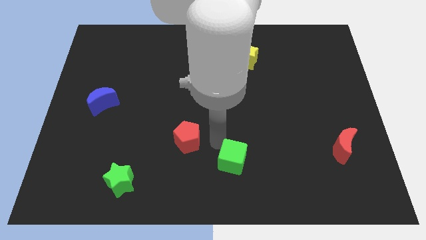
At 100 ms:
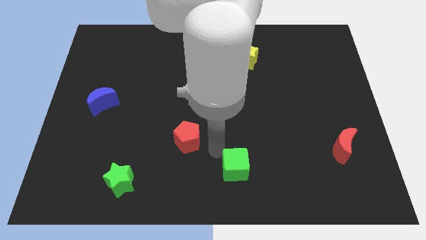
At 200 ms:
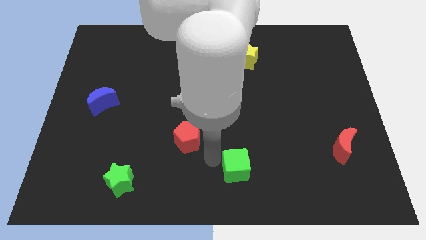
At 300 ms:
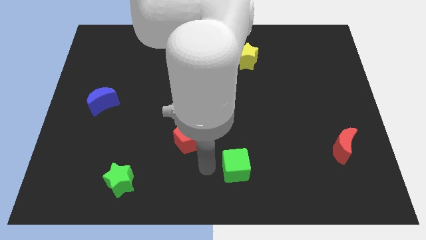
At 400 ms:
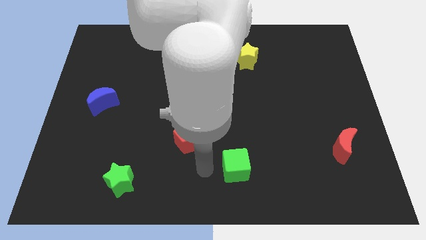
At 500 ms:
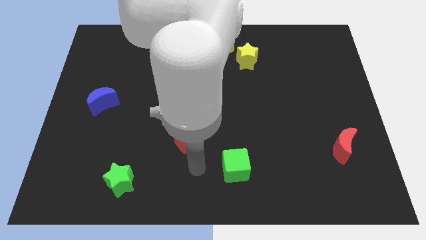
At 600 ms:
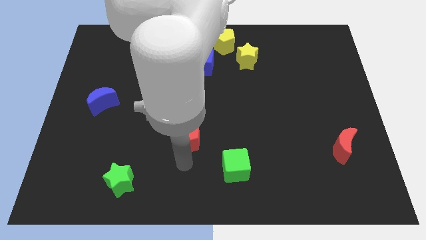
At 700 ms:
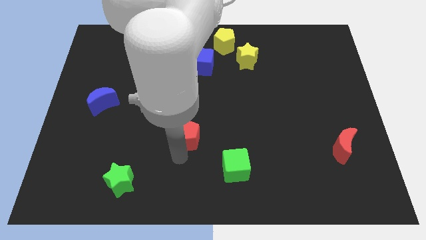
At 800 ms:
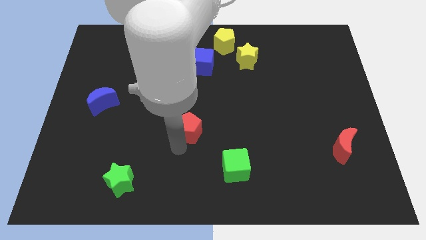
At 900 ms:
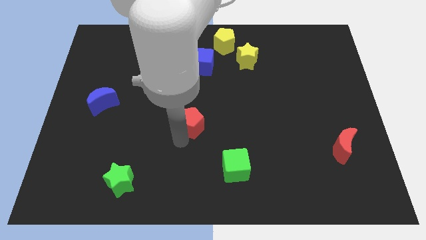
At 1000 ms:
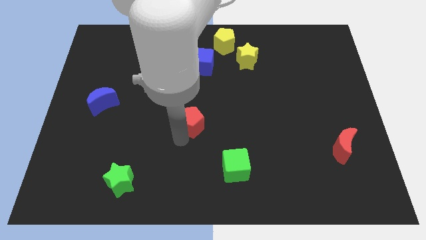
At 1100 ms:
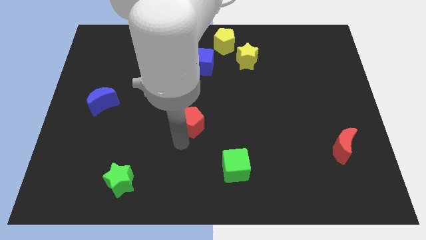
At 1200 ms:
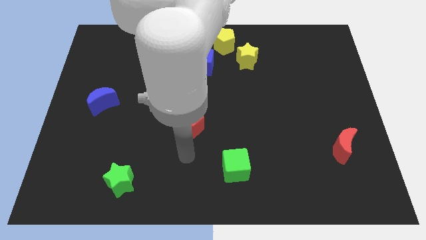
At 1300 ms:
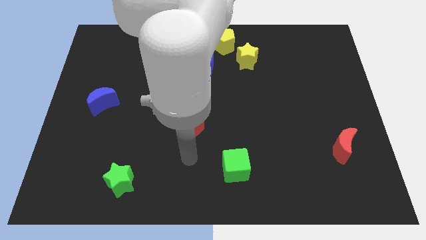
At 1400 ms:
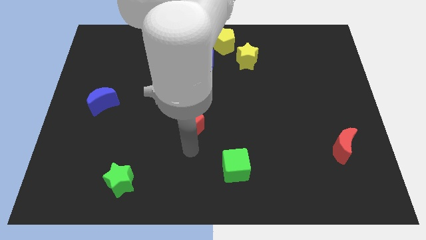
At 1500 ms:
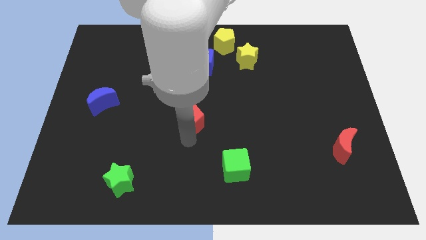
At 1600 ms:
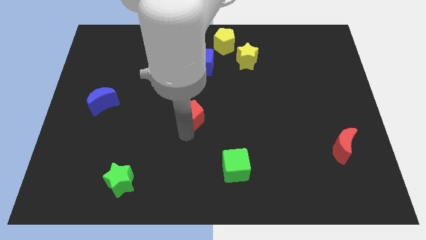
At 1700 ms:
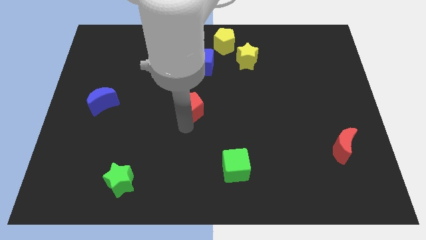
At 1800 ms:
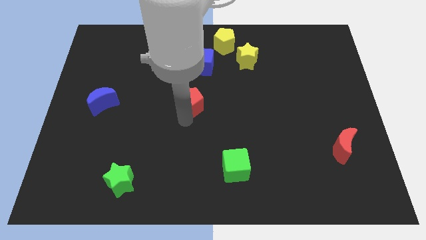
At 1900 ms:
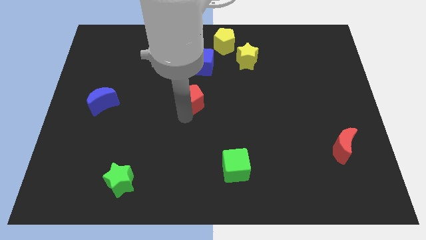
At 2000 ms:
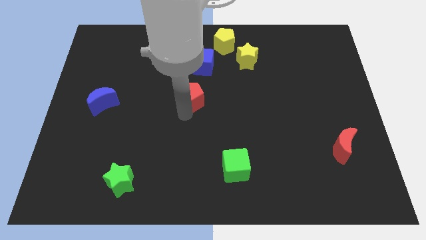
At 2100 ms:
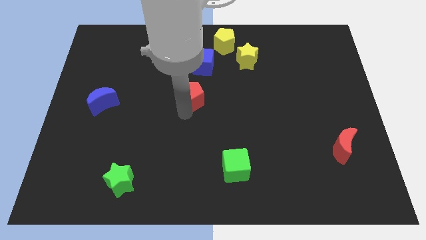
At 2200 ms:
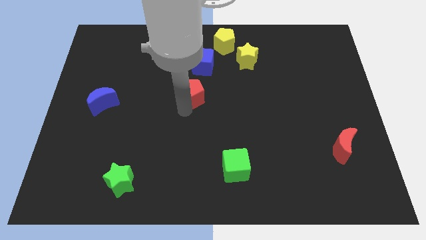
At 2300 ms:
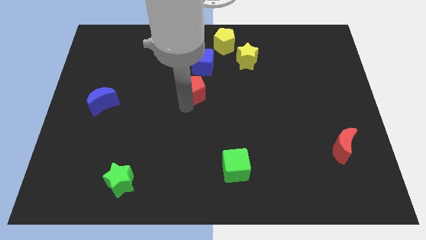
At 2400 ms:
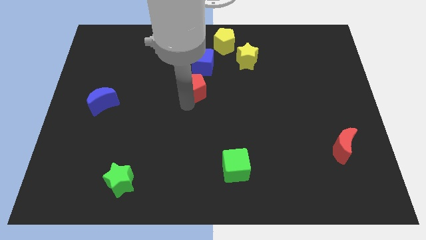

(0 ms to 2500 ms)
push red pentagon towards blue cube

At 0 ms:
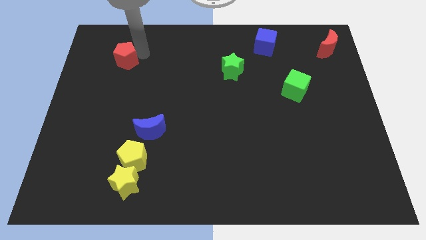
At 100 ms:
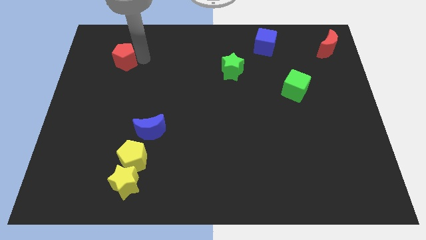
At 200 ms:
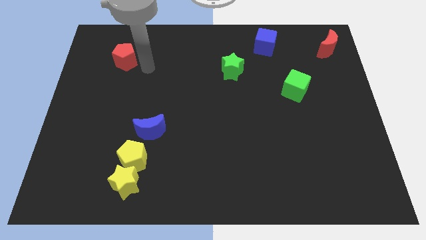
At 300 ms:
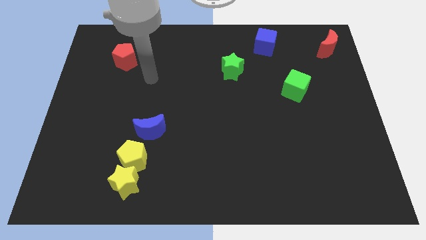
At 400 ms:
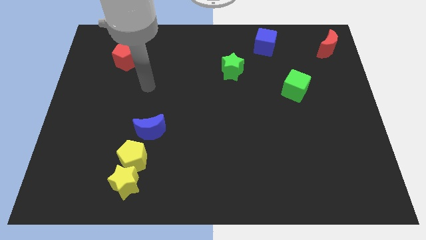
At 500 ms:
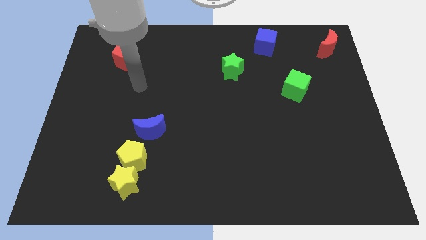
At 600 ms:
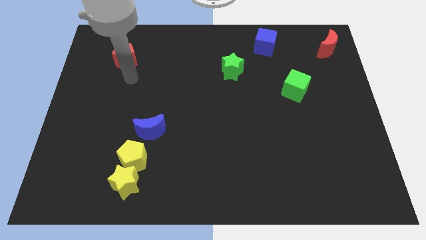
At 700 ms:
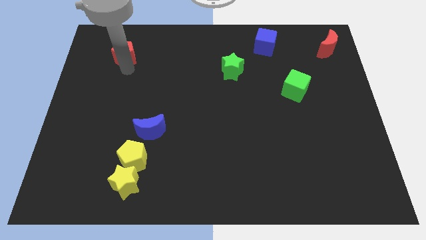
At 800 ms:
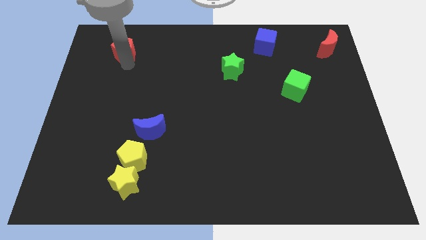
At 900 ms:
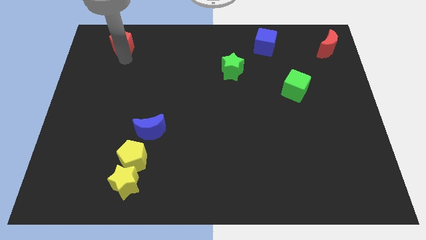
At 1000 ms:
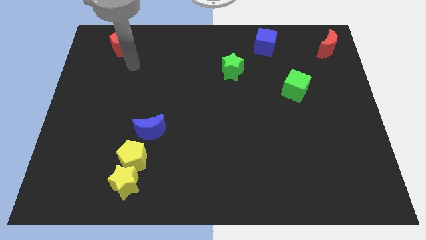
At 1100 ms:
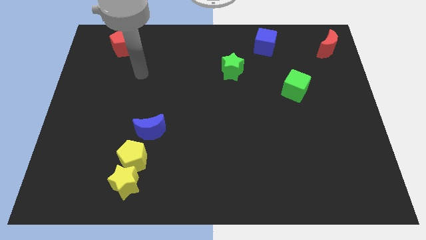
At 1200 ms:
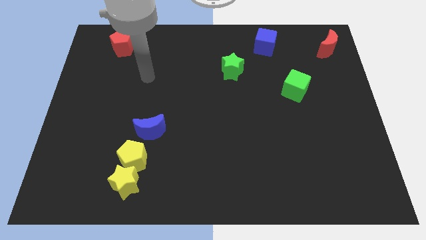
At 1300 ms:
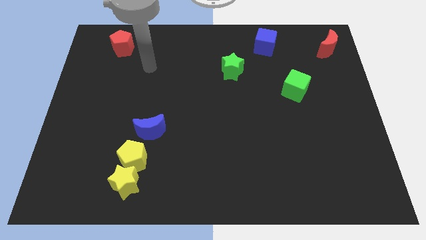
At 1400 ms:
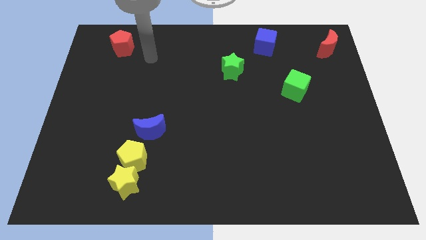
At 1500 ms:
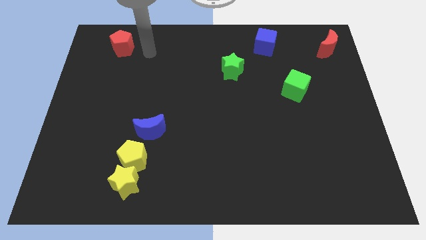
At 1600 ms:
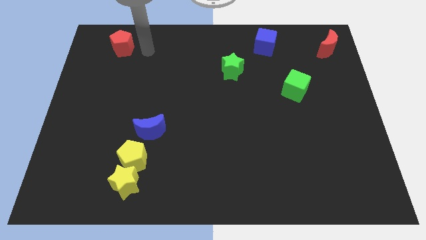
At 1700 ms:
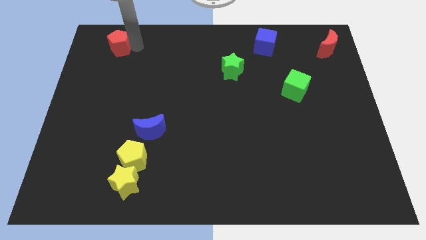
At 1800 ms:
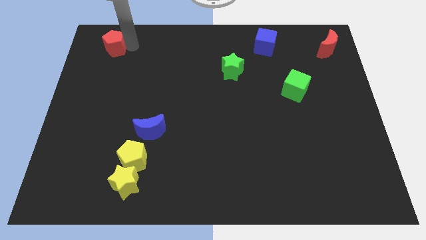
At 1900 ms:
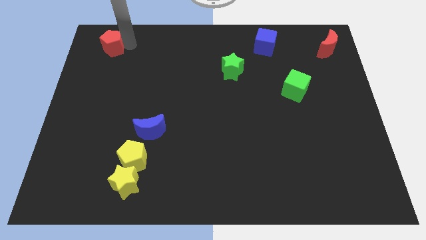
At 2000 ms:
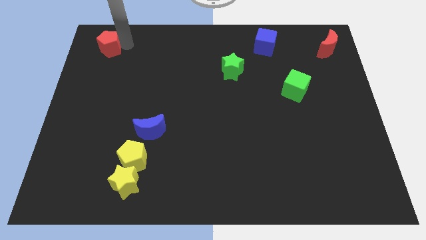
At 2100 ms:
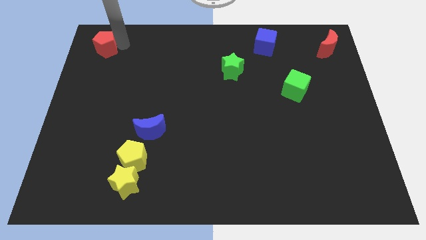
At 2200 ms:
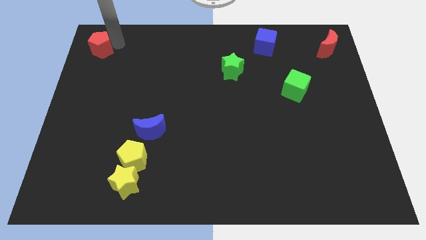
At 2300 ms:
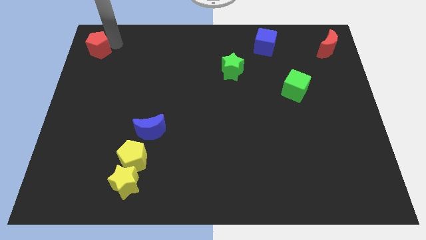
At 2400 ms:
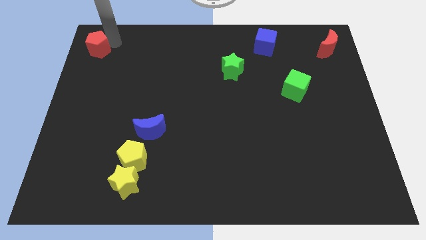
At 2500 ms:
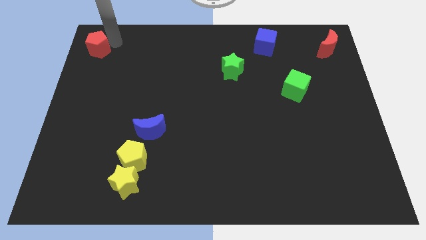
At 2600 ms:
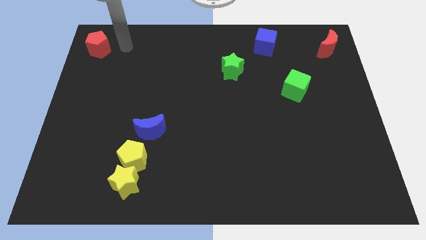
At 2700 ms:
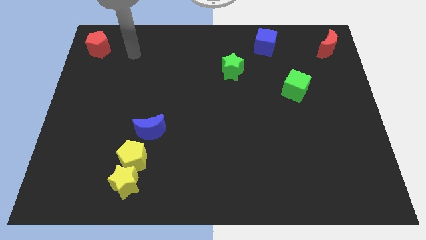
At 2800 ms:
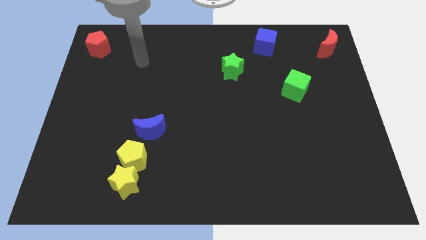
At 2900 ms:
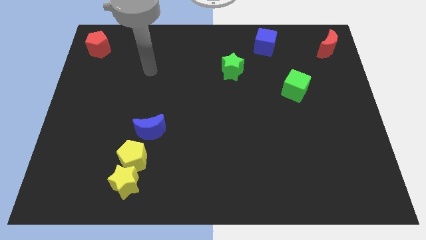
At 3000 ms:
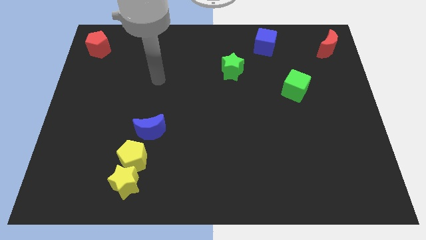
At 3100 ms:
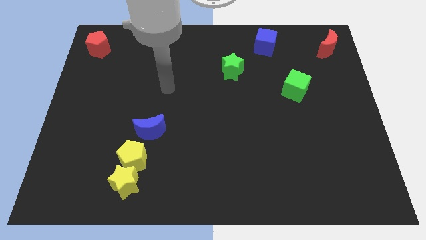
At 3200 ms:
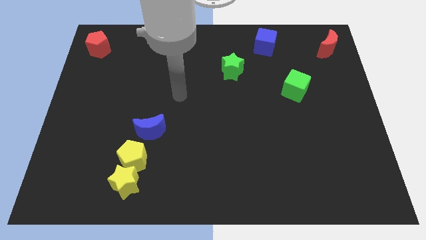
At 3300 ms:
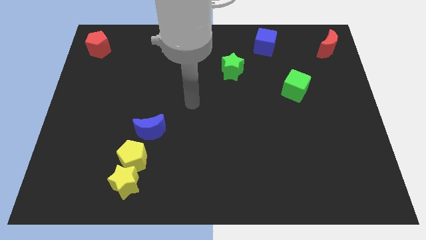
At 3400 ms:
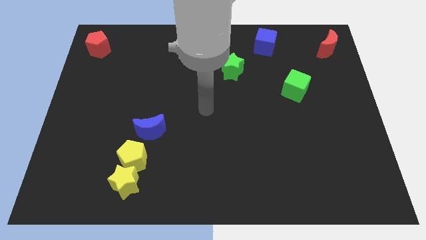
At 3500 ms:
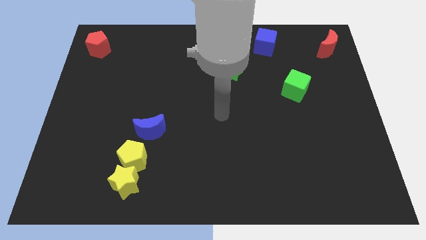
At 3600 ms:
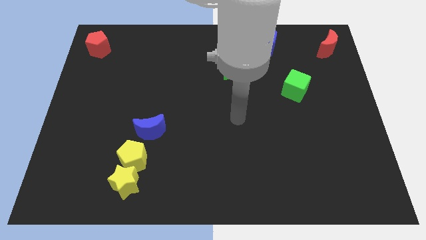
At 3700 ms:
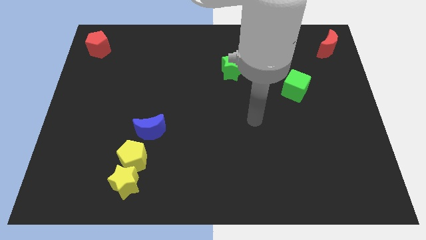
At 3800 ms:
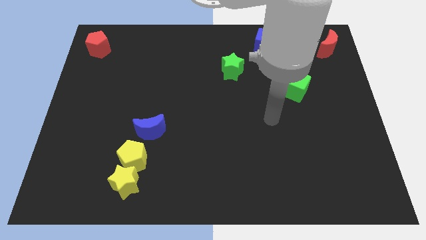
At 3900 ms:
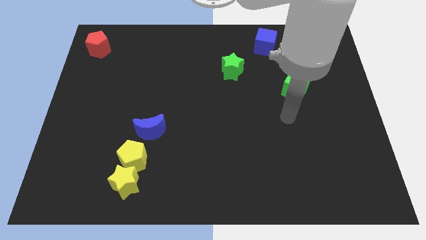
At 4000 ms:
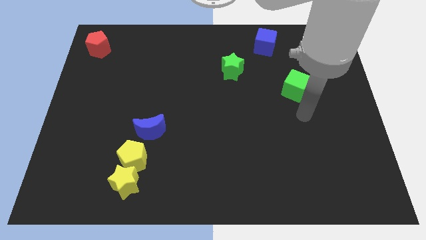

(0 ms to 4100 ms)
place the red pentagon at the top left corner

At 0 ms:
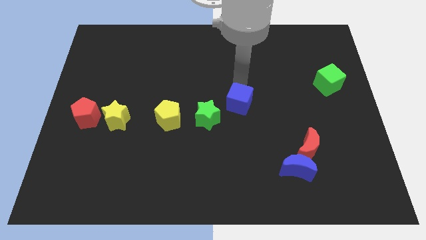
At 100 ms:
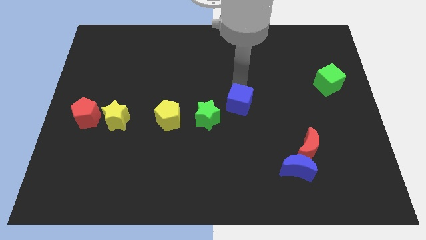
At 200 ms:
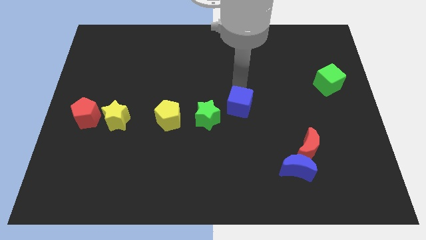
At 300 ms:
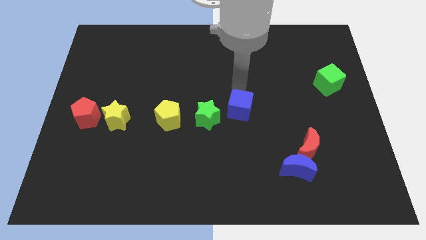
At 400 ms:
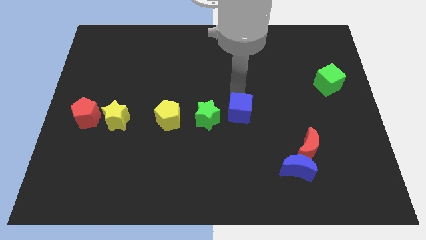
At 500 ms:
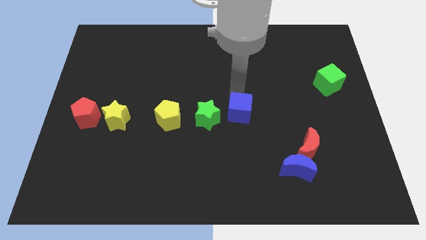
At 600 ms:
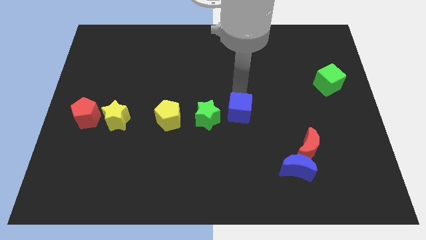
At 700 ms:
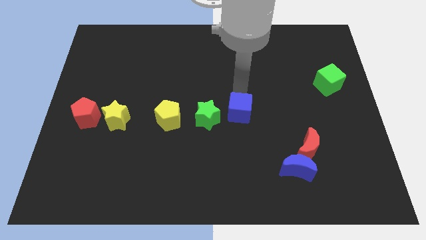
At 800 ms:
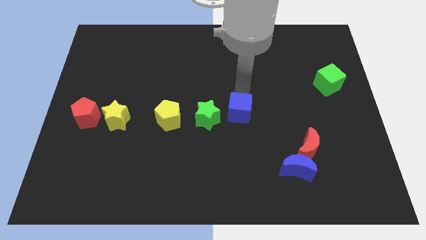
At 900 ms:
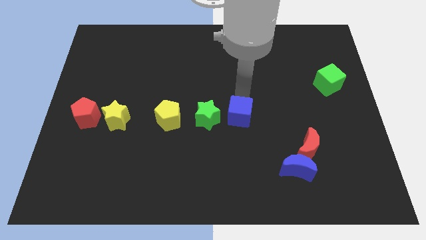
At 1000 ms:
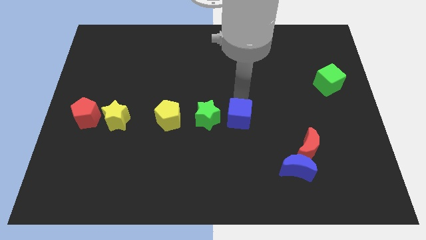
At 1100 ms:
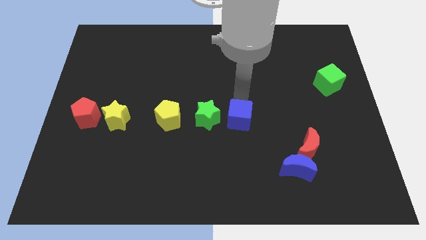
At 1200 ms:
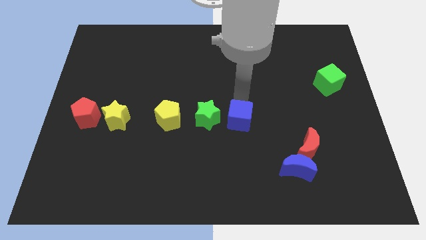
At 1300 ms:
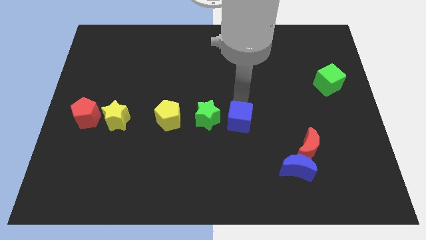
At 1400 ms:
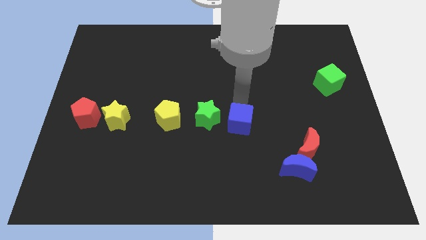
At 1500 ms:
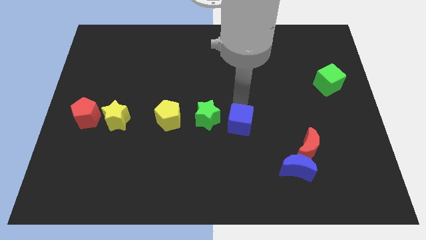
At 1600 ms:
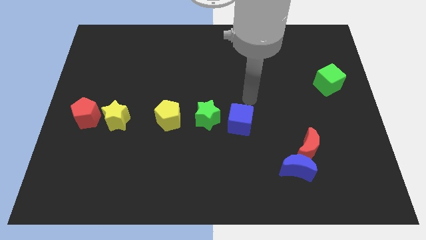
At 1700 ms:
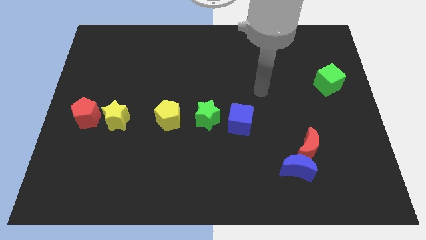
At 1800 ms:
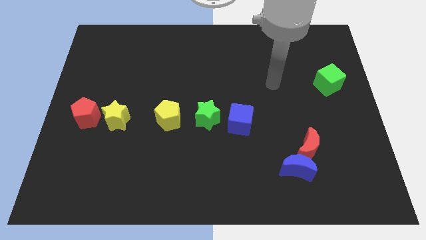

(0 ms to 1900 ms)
place the blue cube to the right of green star

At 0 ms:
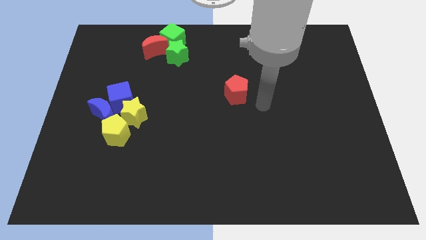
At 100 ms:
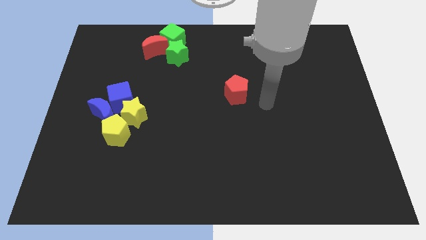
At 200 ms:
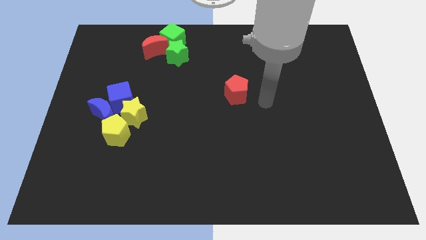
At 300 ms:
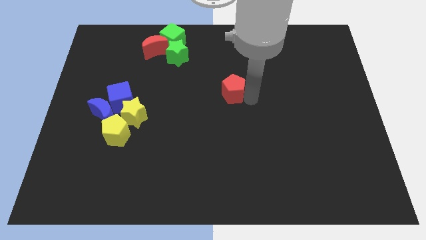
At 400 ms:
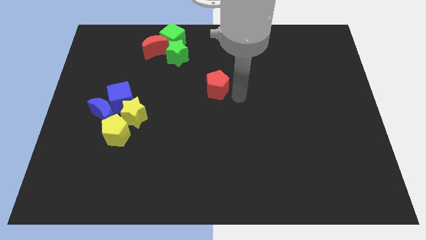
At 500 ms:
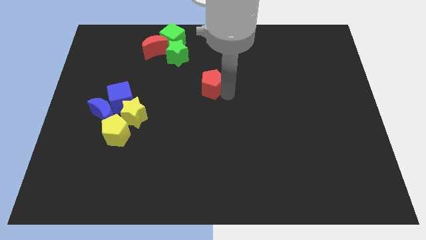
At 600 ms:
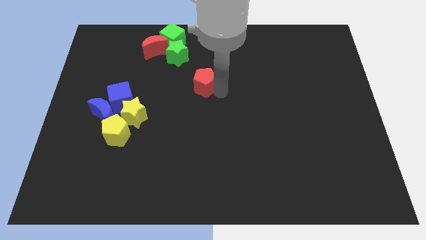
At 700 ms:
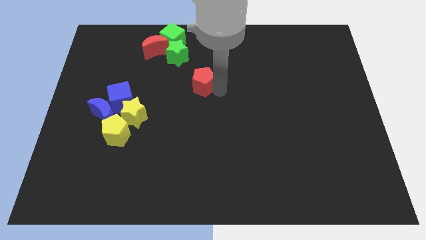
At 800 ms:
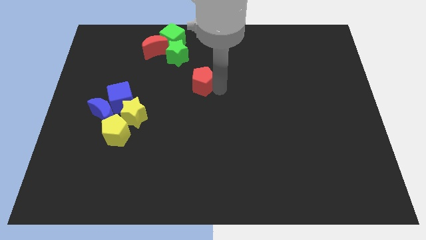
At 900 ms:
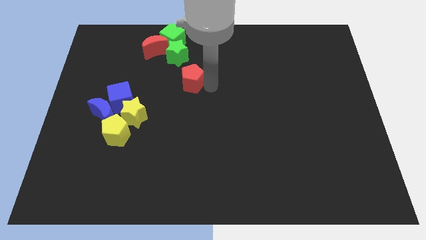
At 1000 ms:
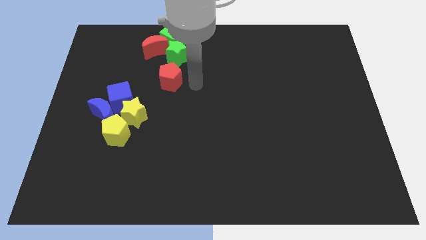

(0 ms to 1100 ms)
place red pentagon below green star
